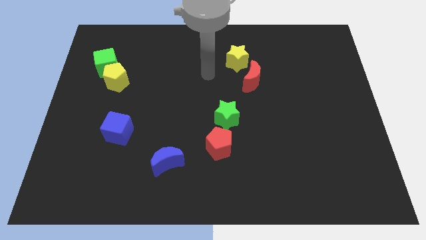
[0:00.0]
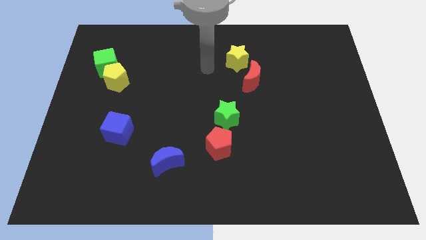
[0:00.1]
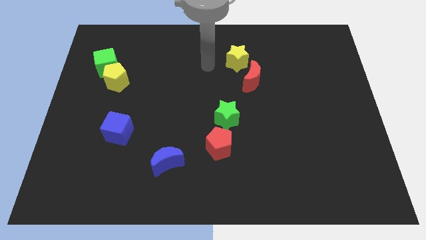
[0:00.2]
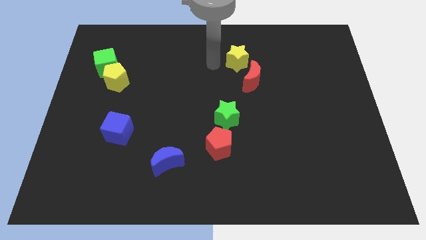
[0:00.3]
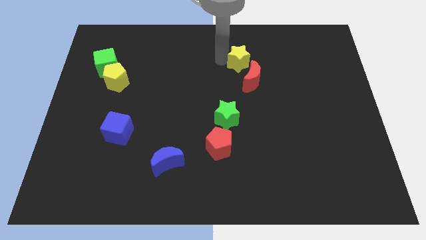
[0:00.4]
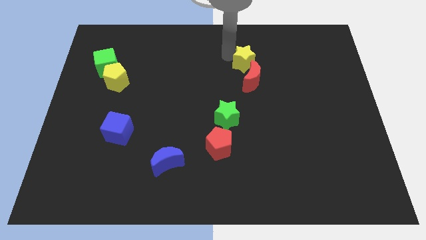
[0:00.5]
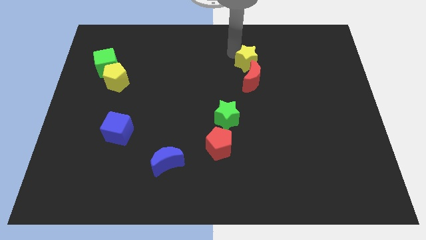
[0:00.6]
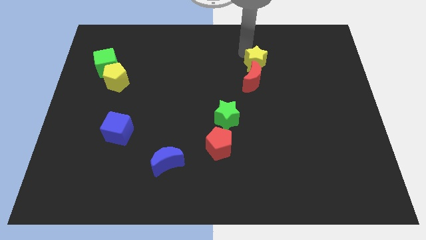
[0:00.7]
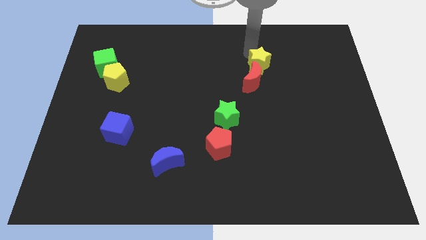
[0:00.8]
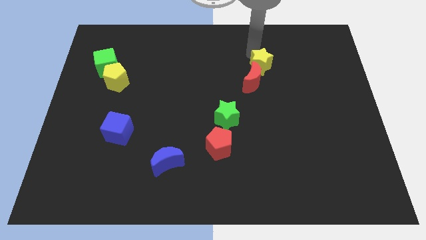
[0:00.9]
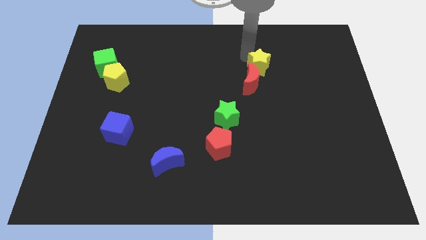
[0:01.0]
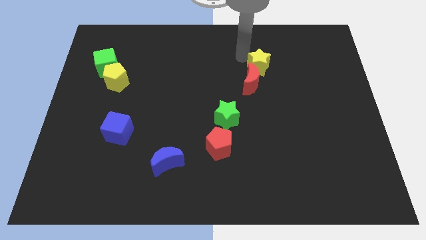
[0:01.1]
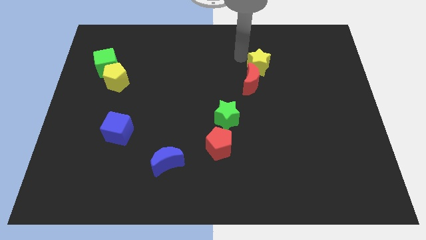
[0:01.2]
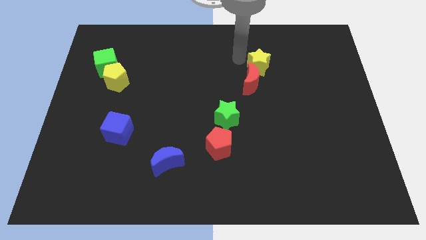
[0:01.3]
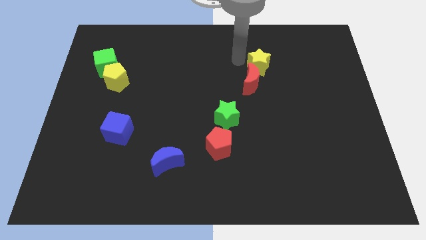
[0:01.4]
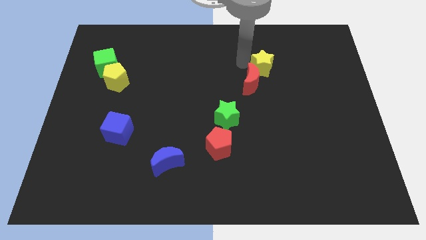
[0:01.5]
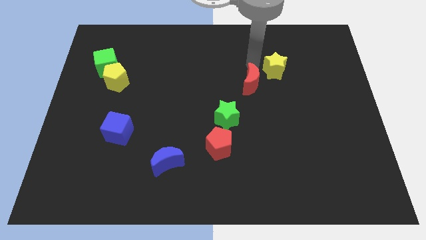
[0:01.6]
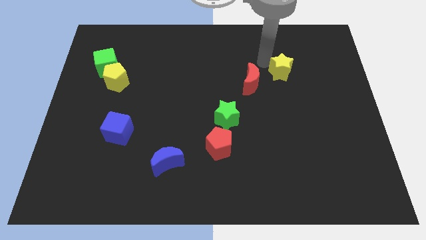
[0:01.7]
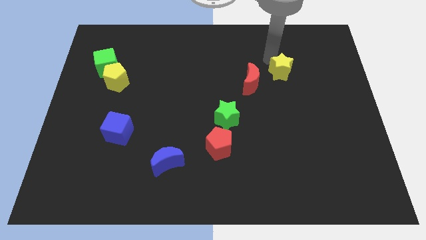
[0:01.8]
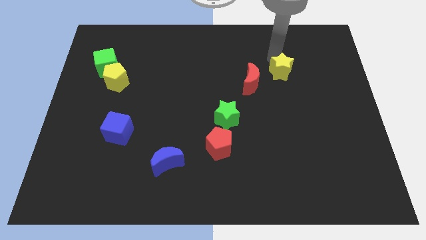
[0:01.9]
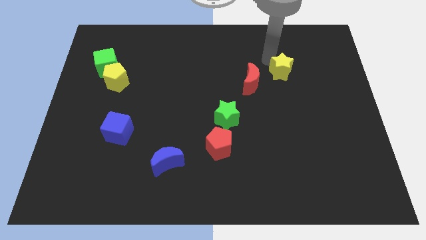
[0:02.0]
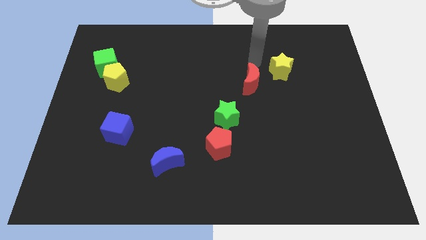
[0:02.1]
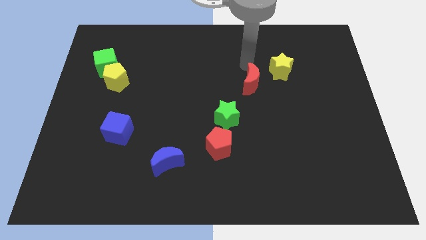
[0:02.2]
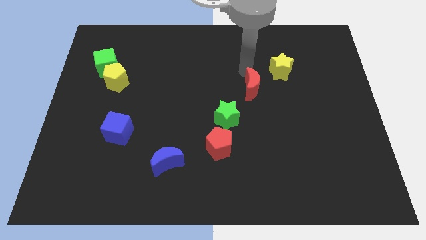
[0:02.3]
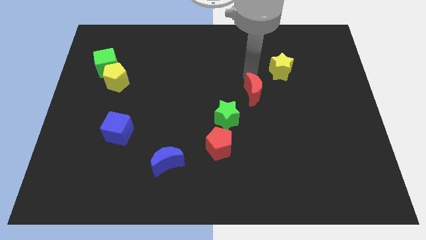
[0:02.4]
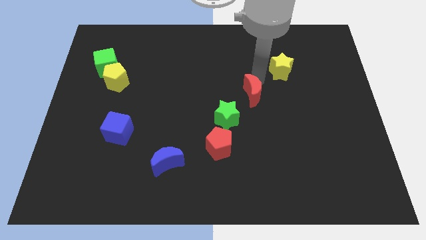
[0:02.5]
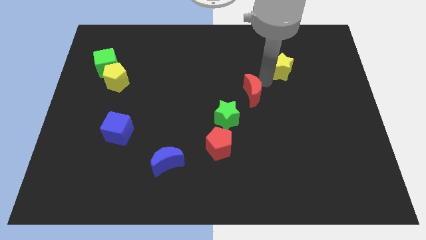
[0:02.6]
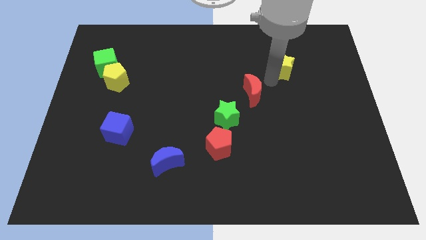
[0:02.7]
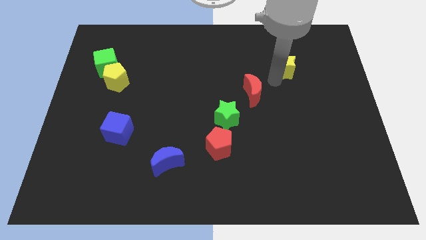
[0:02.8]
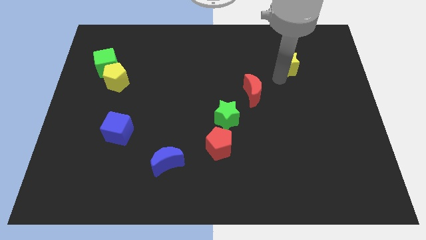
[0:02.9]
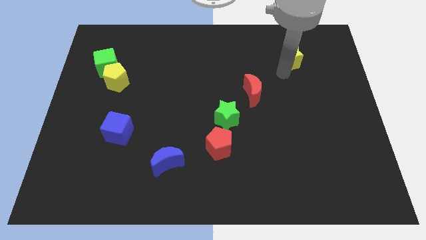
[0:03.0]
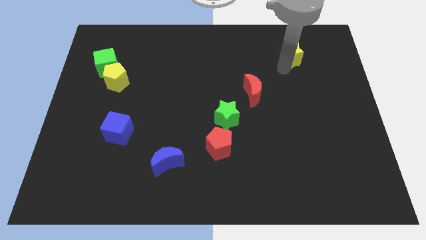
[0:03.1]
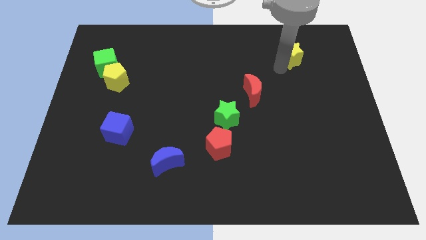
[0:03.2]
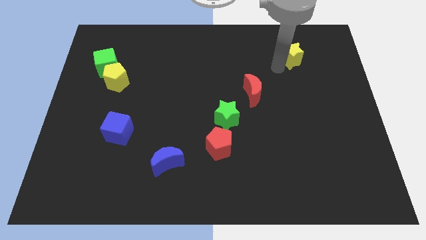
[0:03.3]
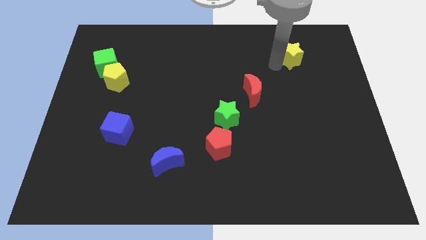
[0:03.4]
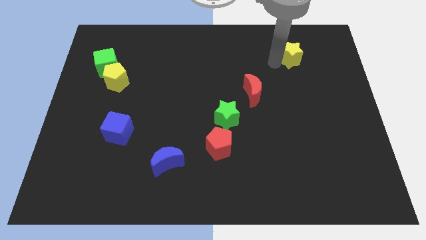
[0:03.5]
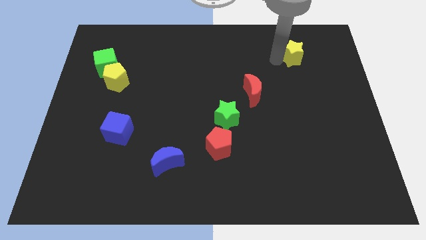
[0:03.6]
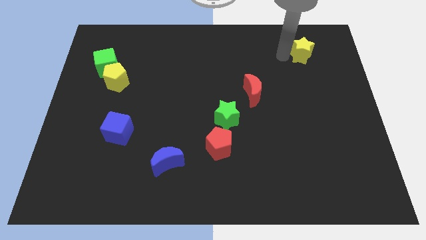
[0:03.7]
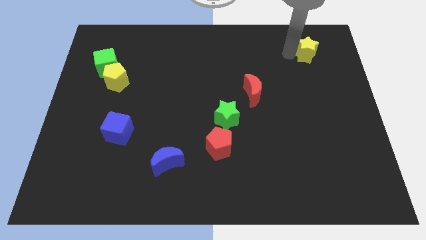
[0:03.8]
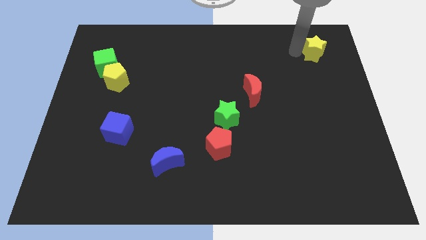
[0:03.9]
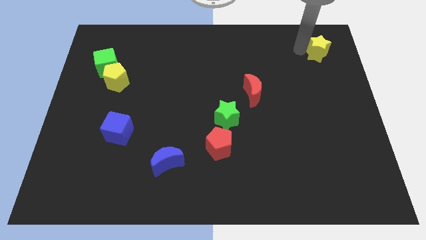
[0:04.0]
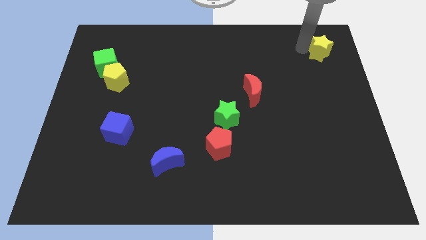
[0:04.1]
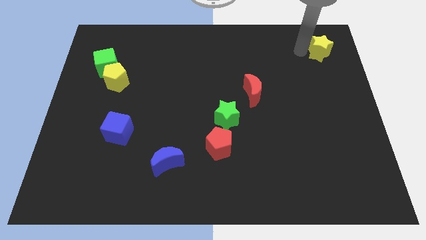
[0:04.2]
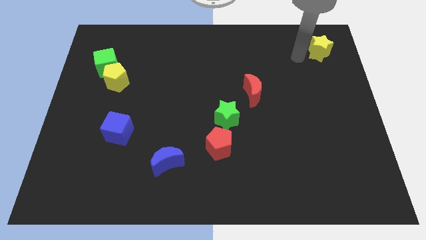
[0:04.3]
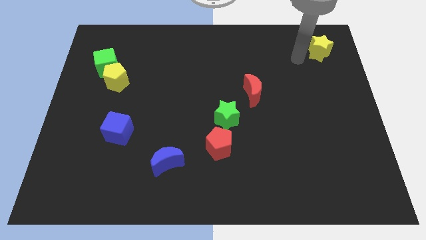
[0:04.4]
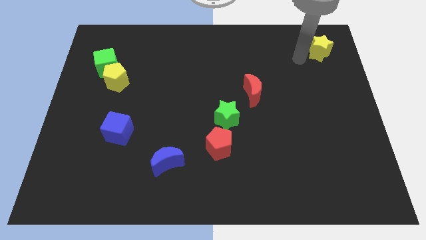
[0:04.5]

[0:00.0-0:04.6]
move yellow star towards top right corner

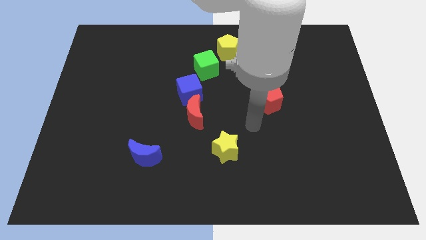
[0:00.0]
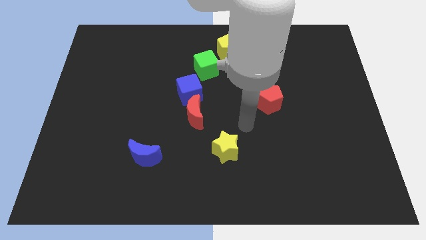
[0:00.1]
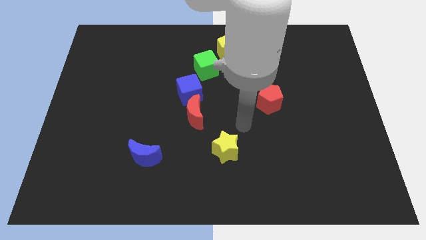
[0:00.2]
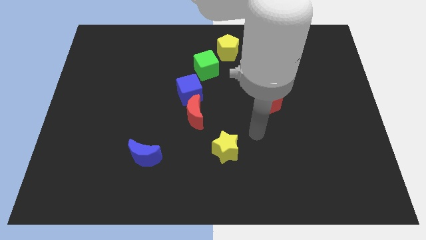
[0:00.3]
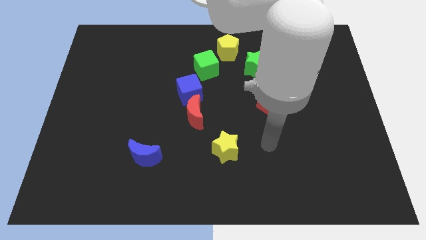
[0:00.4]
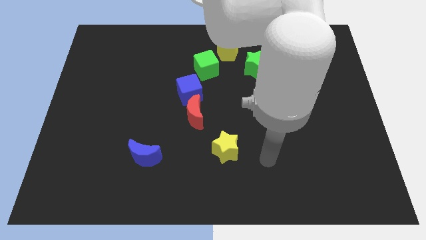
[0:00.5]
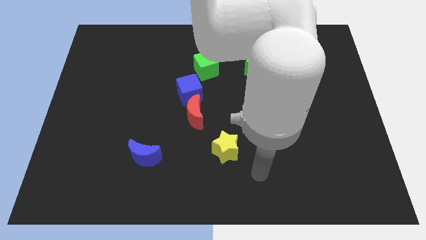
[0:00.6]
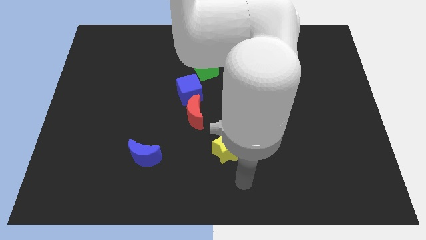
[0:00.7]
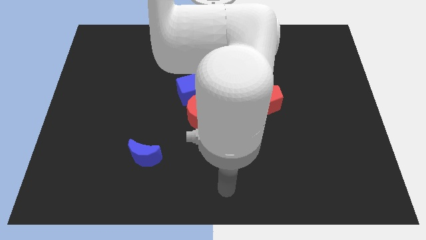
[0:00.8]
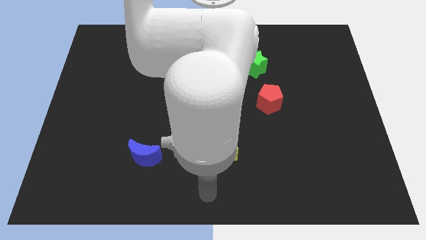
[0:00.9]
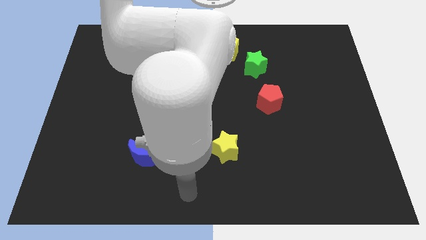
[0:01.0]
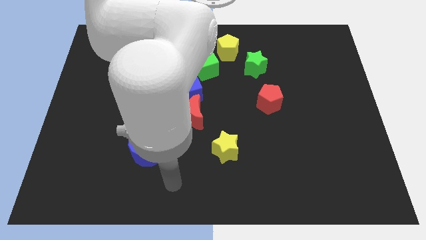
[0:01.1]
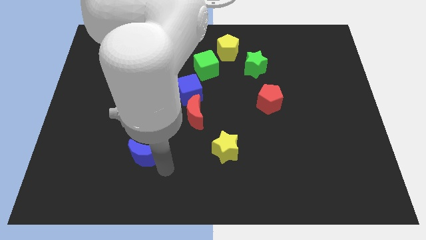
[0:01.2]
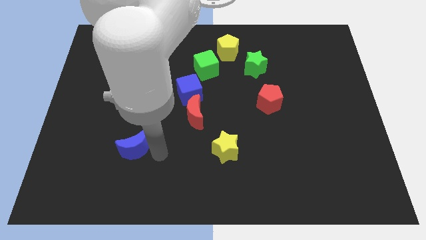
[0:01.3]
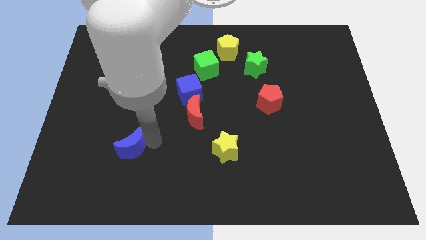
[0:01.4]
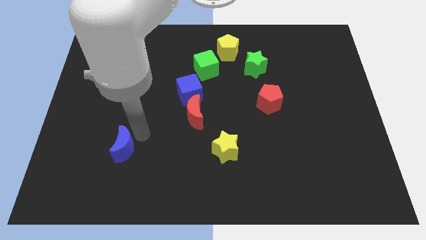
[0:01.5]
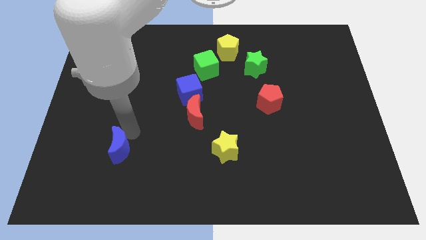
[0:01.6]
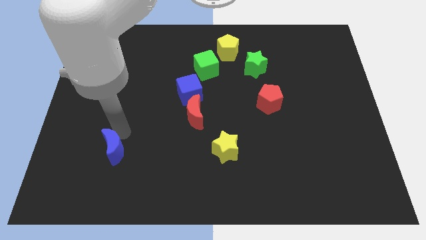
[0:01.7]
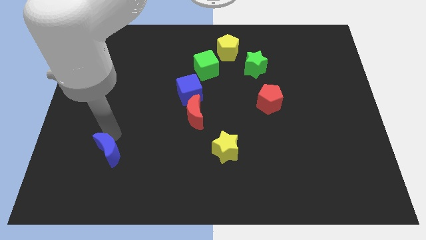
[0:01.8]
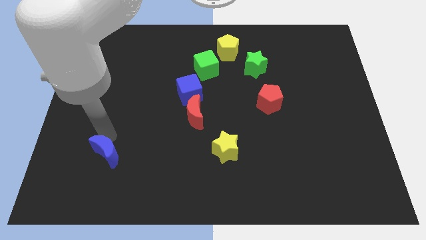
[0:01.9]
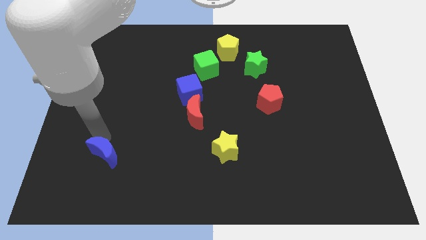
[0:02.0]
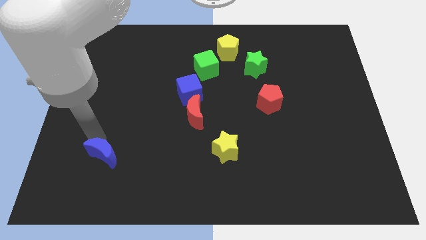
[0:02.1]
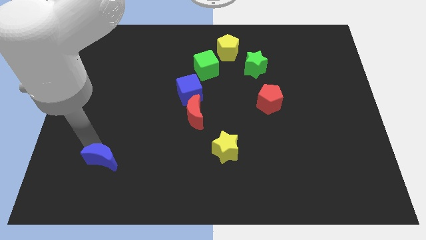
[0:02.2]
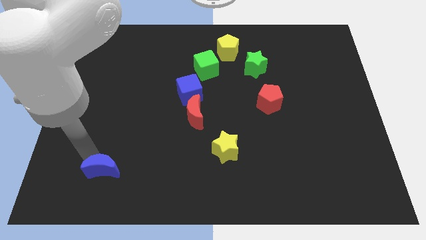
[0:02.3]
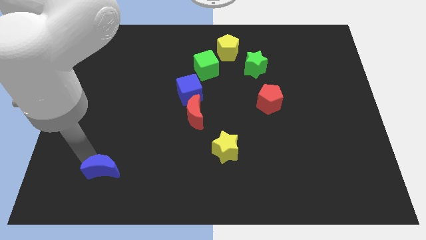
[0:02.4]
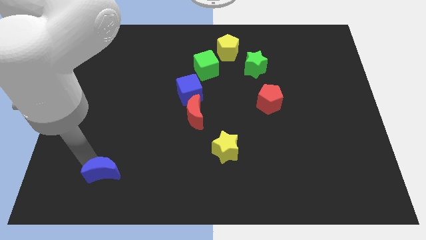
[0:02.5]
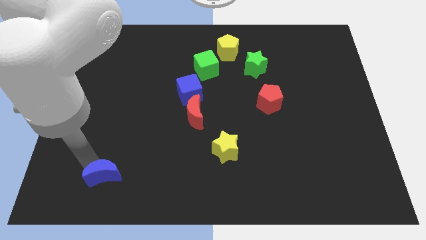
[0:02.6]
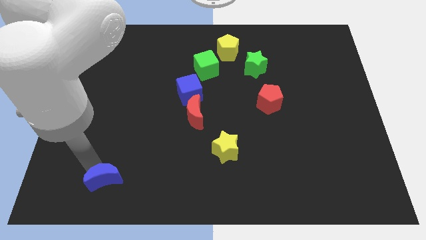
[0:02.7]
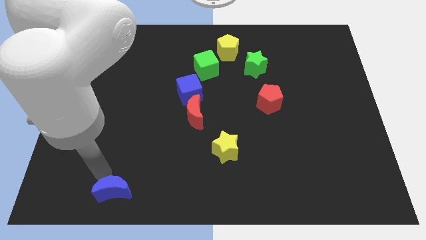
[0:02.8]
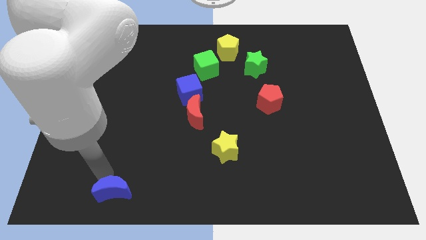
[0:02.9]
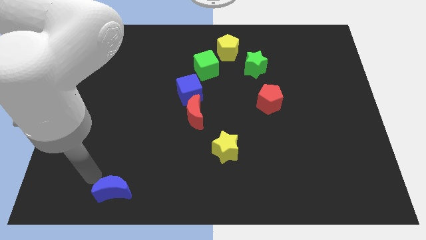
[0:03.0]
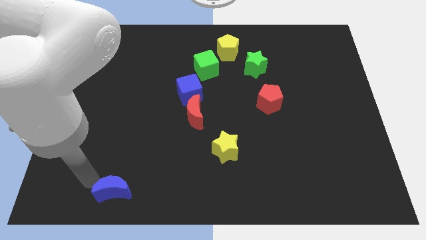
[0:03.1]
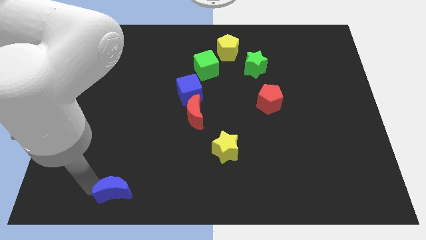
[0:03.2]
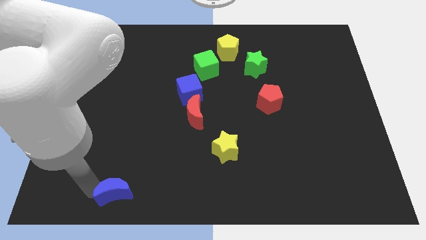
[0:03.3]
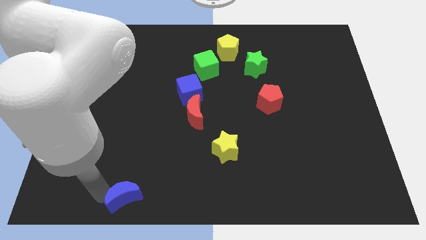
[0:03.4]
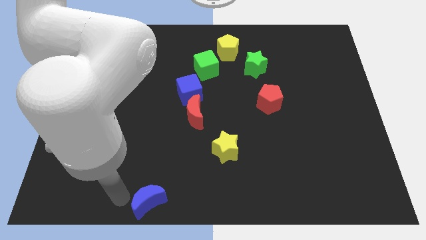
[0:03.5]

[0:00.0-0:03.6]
drag the blue crescent diagonally on the bottom left side of the yellow star

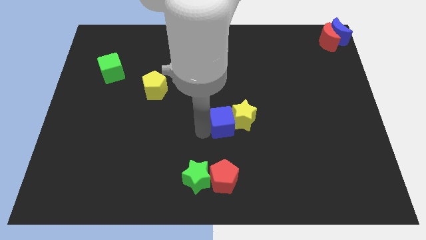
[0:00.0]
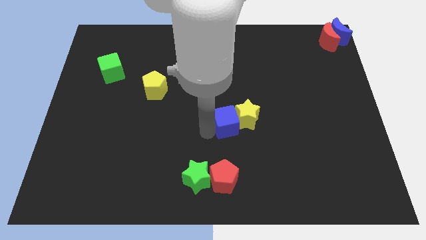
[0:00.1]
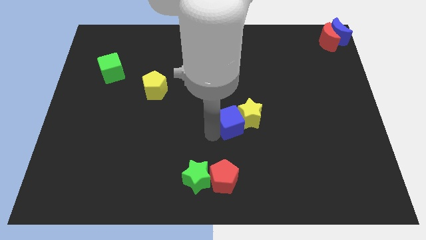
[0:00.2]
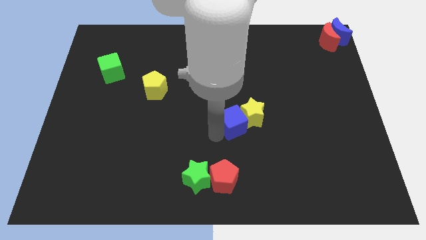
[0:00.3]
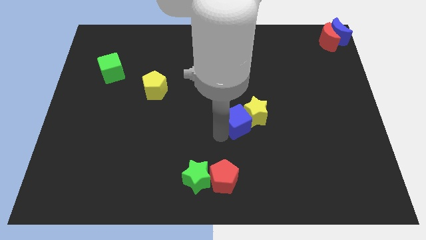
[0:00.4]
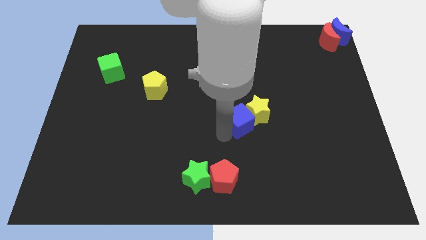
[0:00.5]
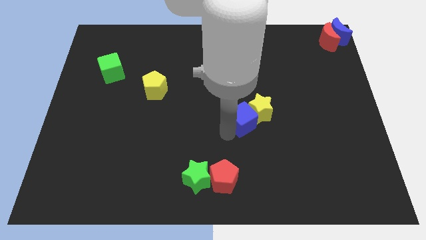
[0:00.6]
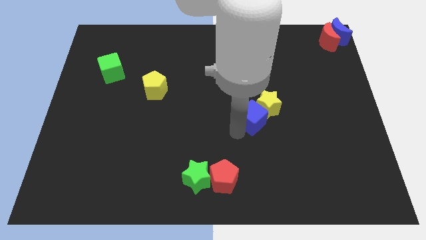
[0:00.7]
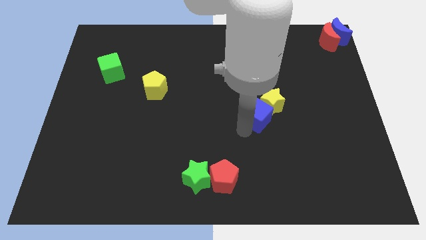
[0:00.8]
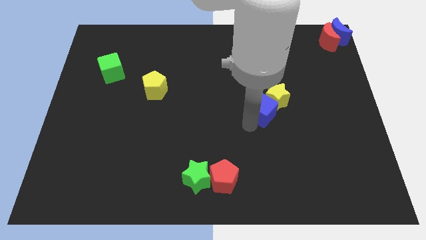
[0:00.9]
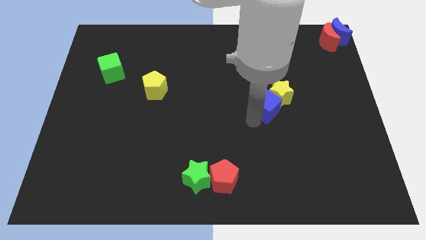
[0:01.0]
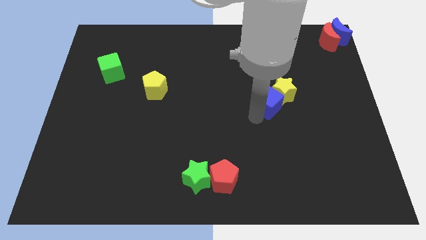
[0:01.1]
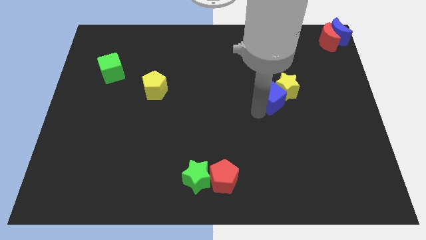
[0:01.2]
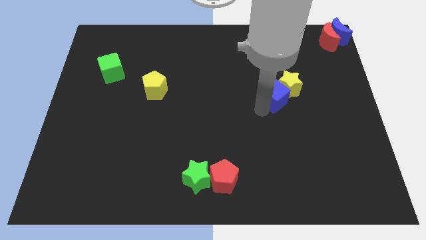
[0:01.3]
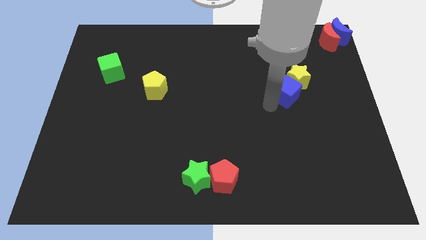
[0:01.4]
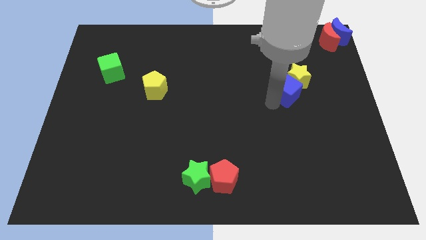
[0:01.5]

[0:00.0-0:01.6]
move the blue cube and yellow star towards the red crescent
